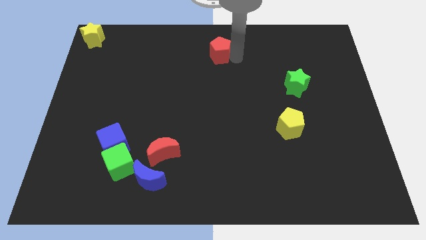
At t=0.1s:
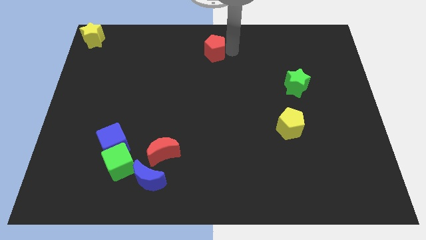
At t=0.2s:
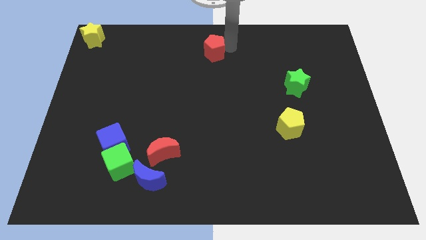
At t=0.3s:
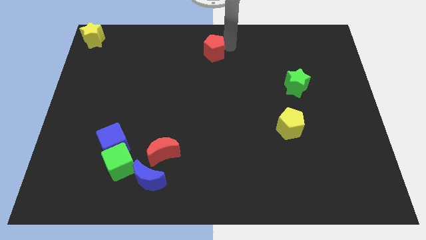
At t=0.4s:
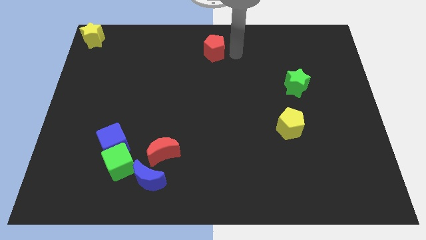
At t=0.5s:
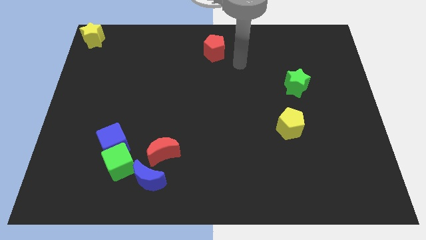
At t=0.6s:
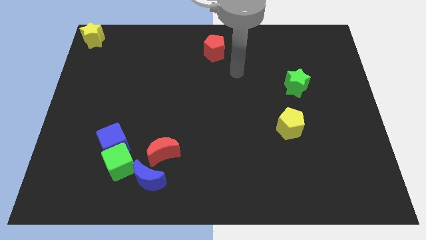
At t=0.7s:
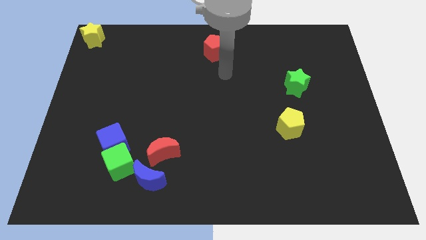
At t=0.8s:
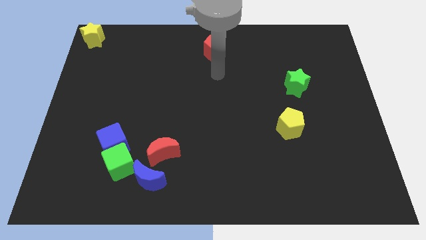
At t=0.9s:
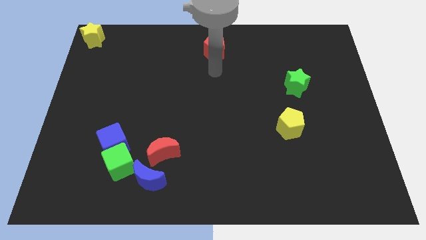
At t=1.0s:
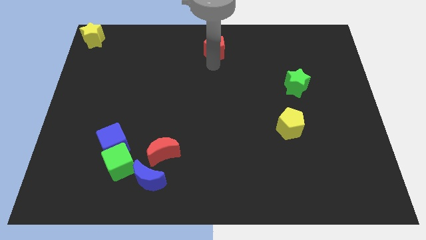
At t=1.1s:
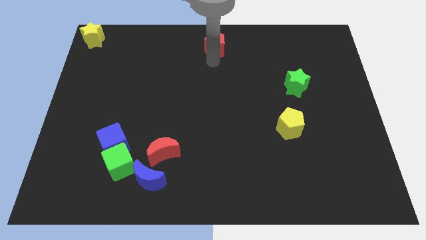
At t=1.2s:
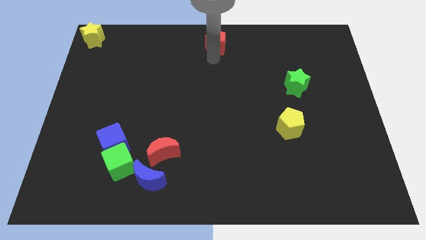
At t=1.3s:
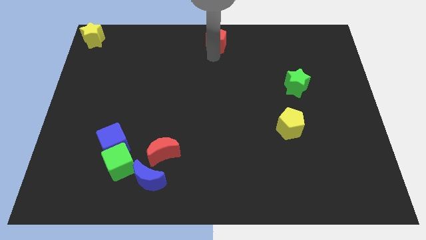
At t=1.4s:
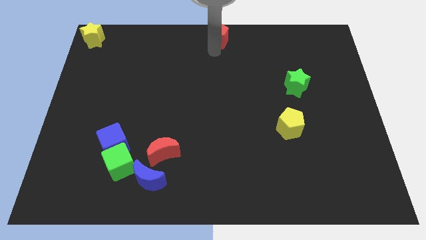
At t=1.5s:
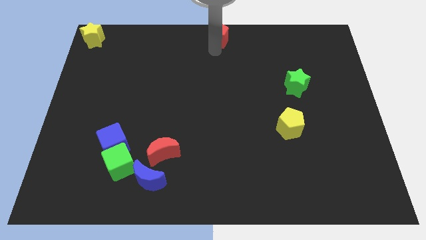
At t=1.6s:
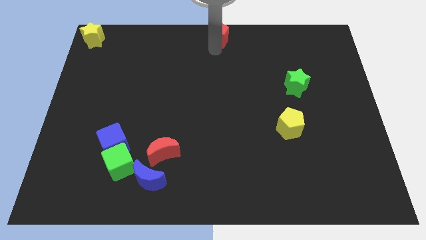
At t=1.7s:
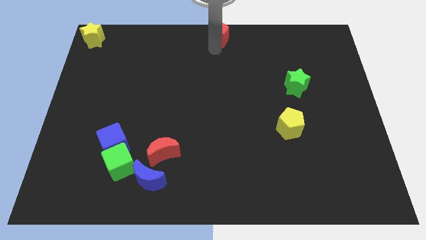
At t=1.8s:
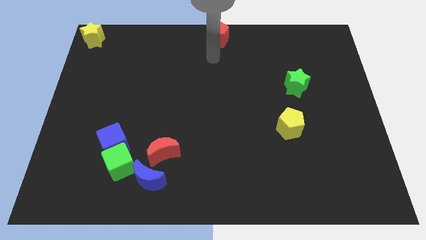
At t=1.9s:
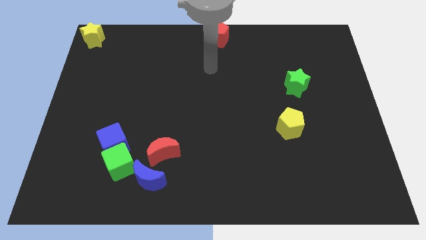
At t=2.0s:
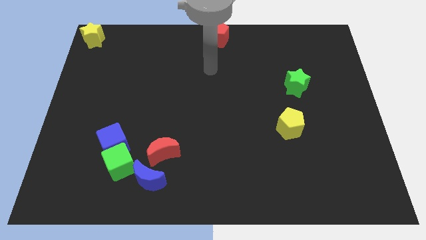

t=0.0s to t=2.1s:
place the red pentagon at top center of the board

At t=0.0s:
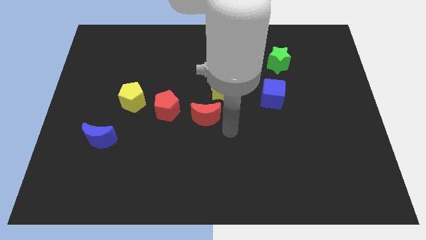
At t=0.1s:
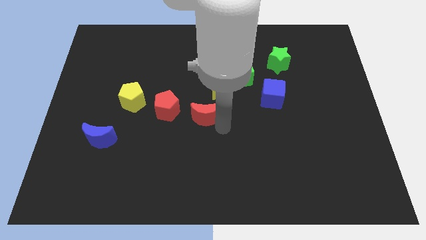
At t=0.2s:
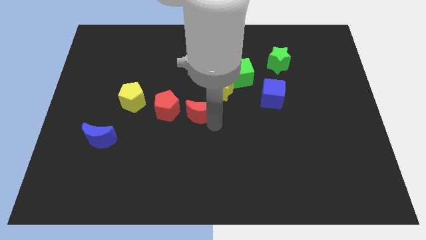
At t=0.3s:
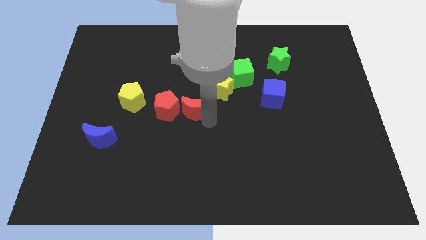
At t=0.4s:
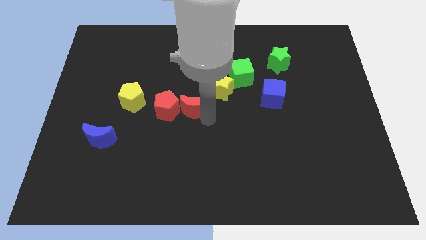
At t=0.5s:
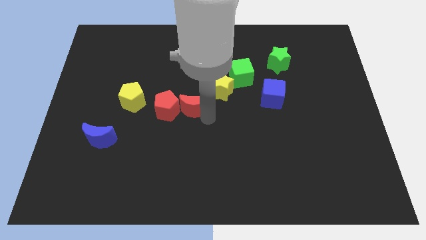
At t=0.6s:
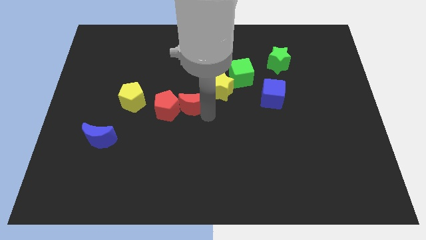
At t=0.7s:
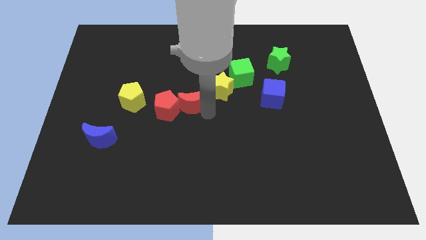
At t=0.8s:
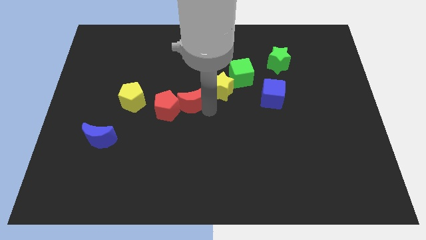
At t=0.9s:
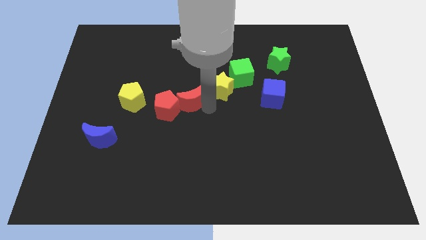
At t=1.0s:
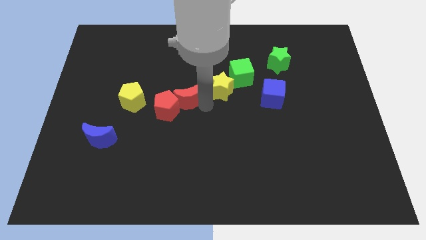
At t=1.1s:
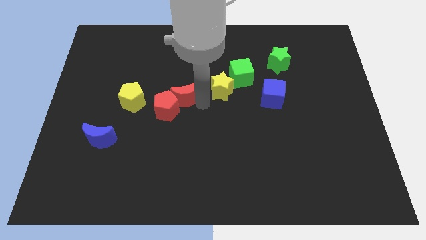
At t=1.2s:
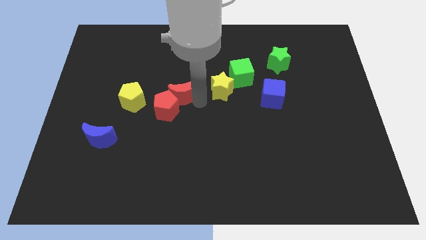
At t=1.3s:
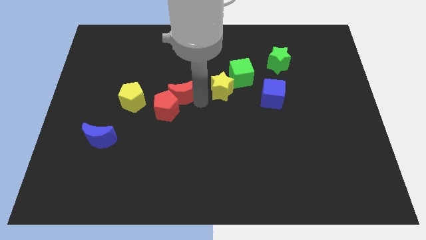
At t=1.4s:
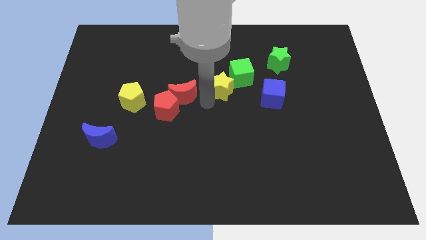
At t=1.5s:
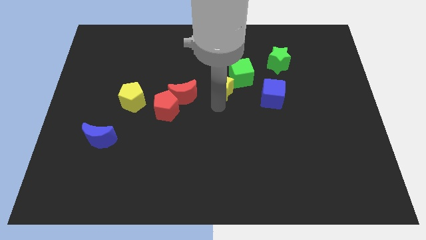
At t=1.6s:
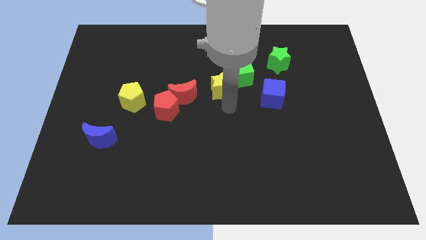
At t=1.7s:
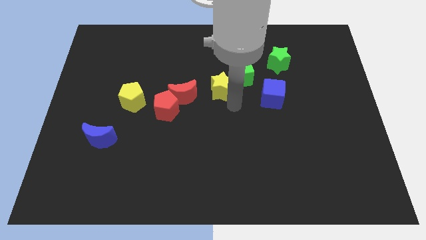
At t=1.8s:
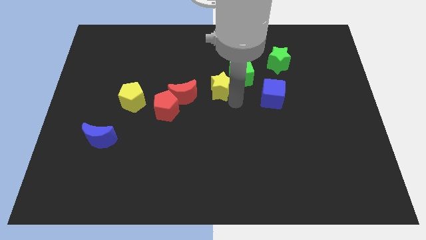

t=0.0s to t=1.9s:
disturb the red crescent

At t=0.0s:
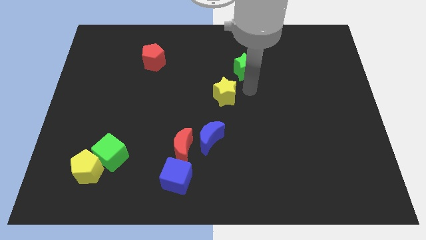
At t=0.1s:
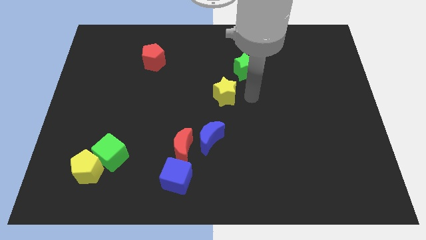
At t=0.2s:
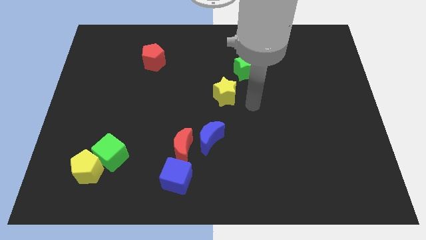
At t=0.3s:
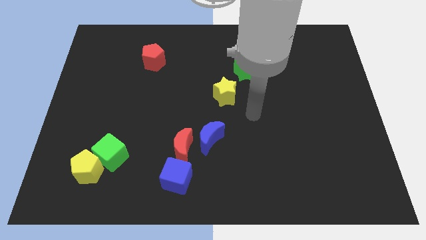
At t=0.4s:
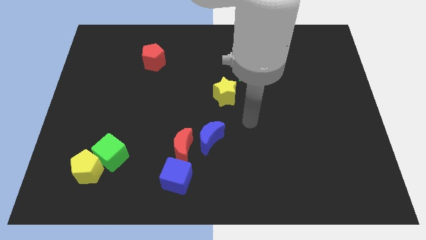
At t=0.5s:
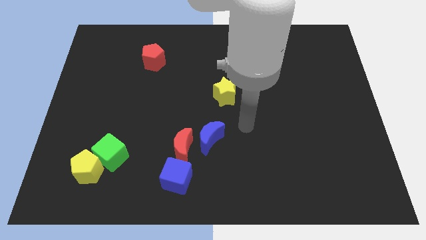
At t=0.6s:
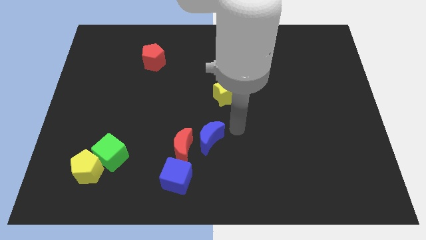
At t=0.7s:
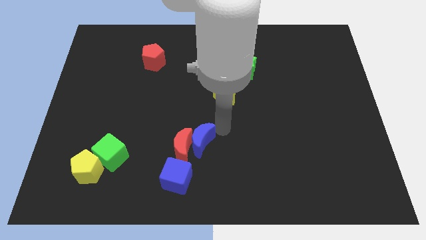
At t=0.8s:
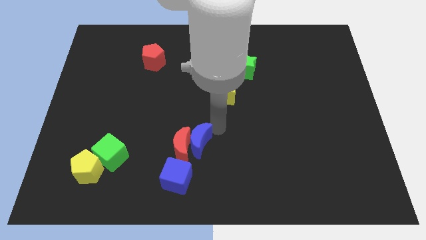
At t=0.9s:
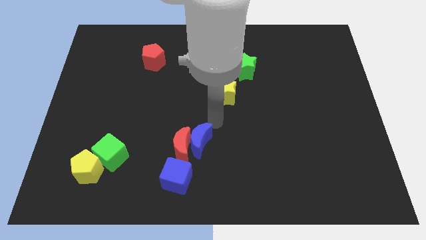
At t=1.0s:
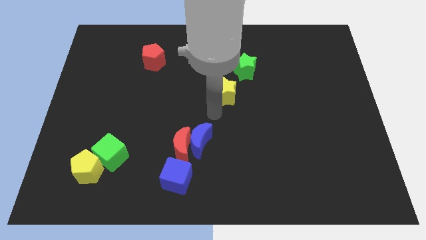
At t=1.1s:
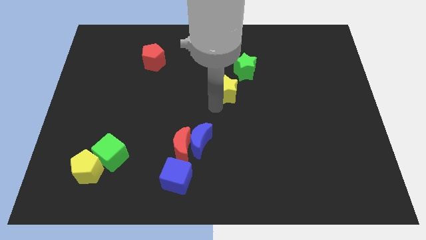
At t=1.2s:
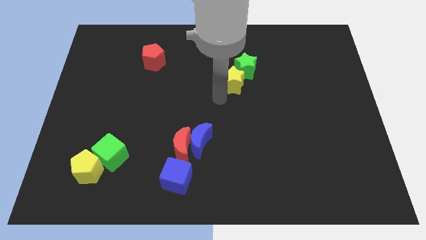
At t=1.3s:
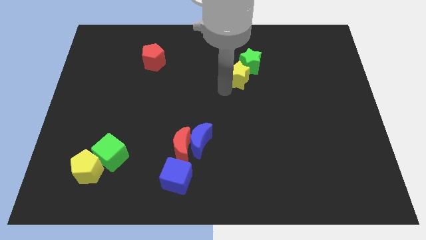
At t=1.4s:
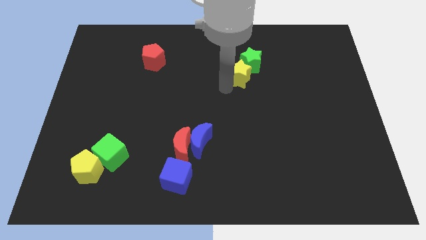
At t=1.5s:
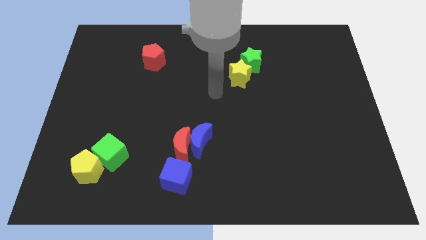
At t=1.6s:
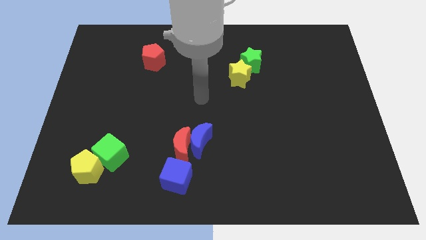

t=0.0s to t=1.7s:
push the blue moon into the red mooon

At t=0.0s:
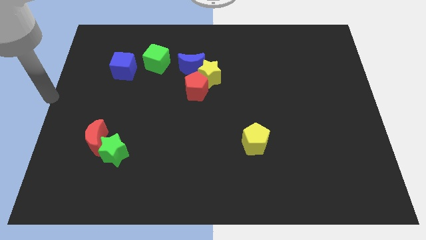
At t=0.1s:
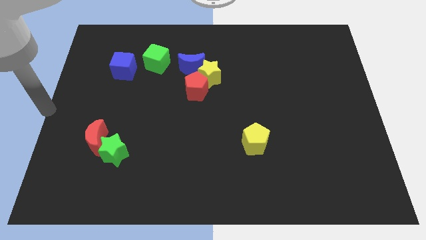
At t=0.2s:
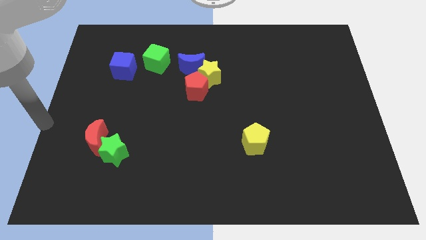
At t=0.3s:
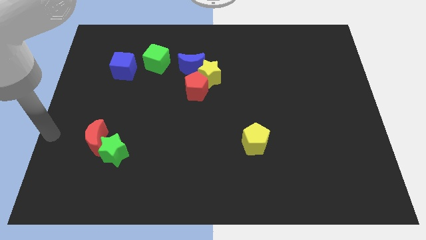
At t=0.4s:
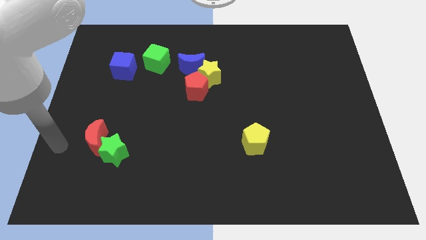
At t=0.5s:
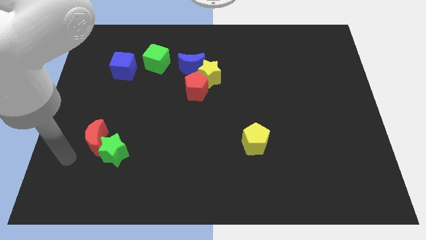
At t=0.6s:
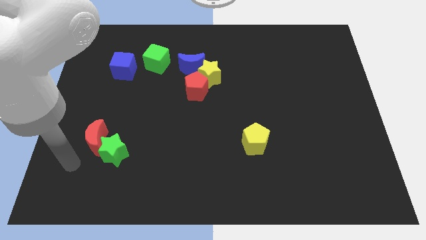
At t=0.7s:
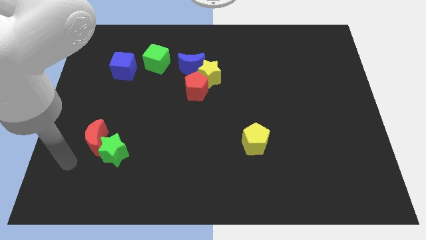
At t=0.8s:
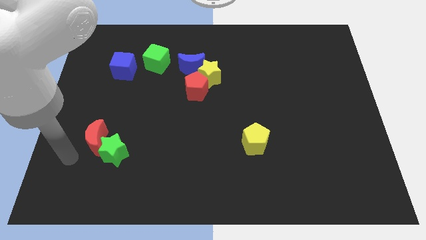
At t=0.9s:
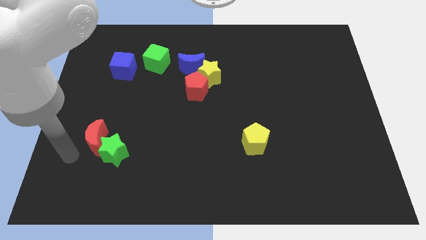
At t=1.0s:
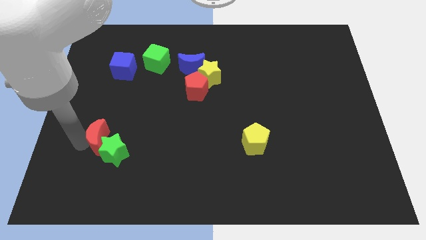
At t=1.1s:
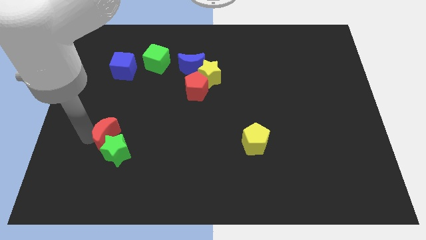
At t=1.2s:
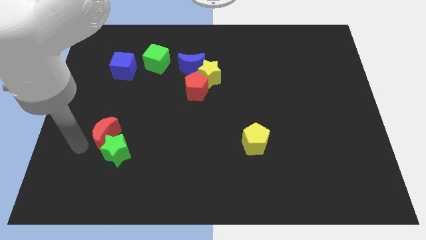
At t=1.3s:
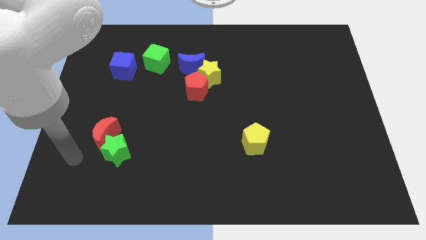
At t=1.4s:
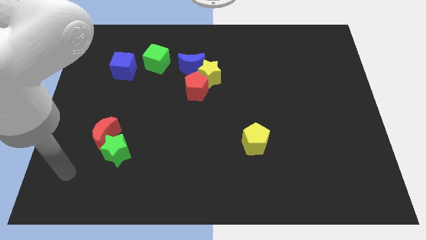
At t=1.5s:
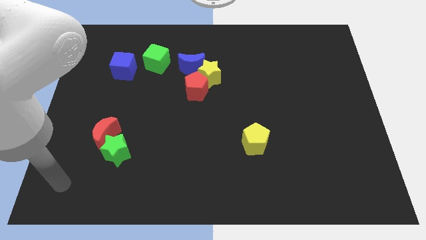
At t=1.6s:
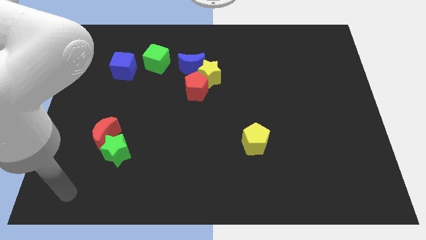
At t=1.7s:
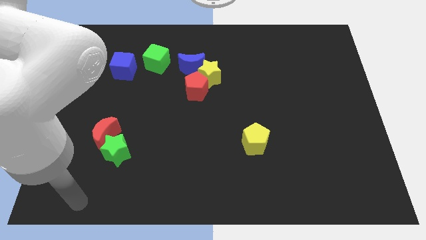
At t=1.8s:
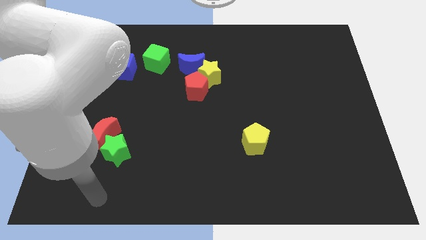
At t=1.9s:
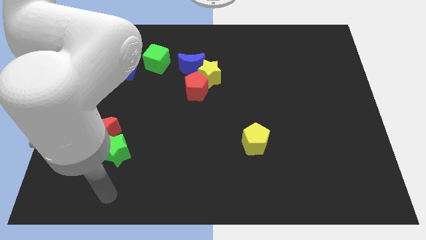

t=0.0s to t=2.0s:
push the red crescent towards the green star

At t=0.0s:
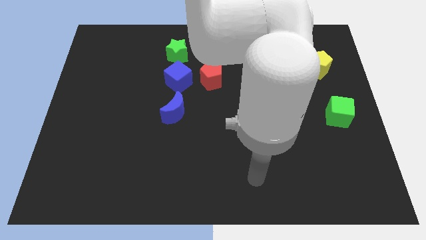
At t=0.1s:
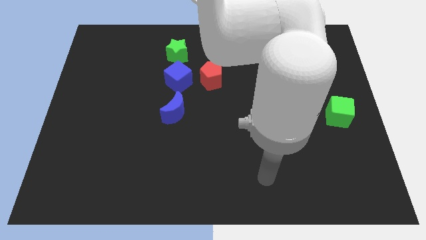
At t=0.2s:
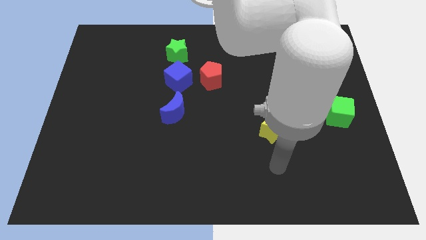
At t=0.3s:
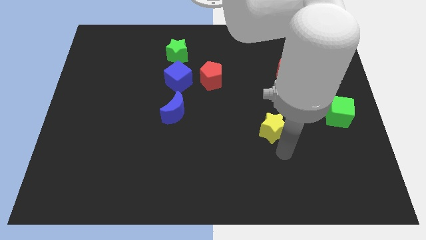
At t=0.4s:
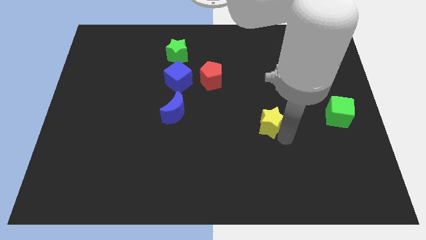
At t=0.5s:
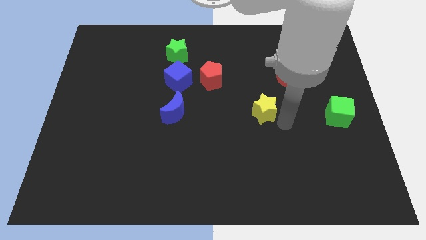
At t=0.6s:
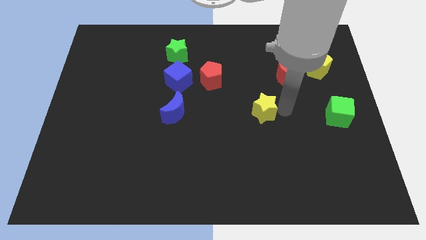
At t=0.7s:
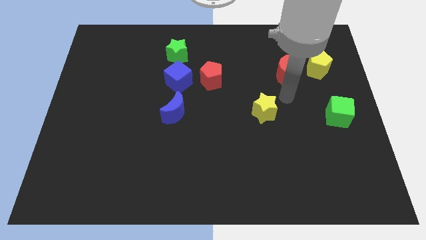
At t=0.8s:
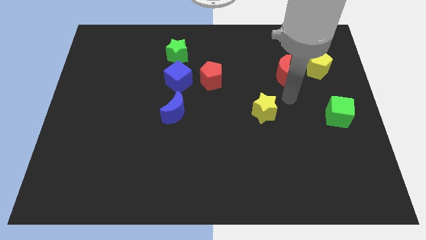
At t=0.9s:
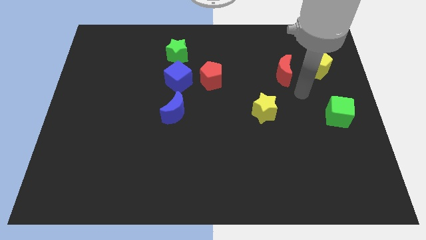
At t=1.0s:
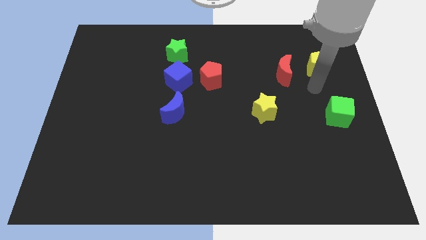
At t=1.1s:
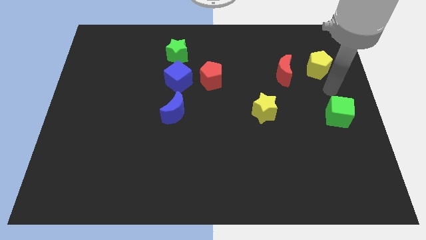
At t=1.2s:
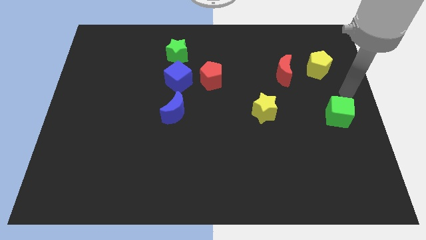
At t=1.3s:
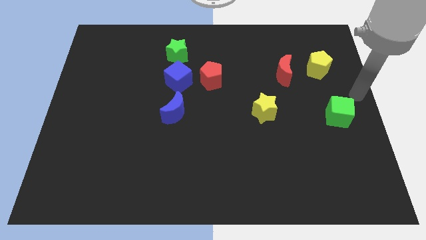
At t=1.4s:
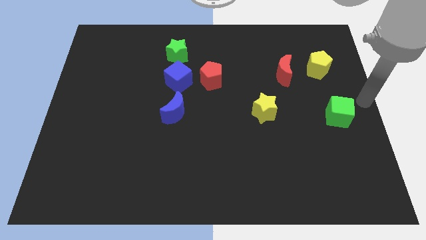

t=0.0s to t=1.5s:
place the yellow star in between the green cube and blue moon
